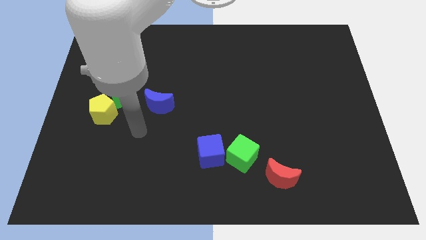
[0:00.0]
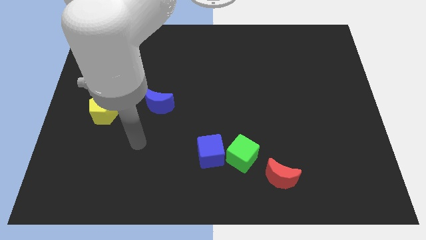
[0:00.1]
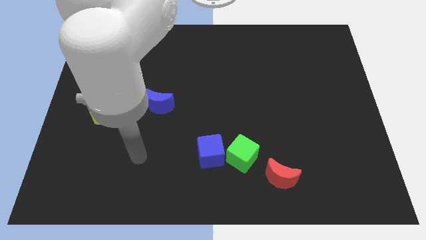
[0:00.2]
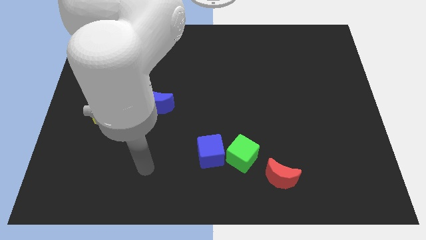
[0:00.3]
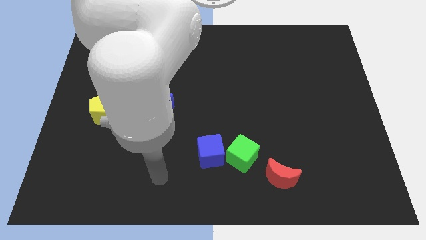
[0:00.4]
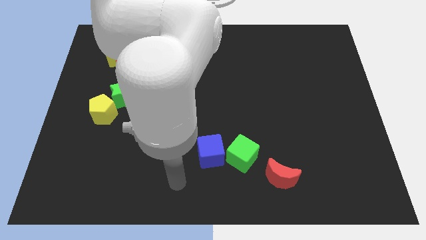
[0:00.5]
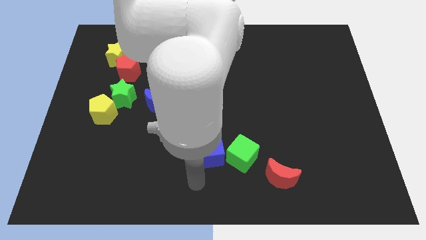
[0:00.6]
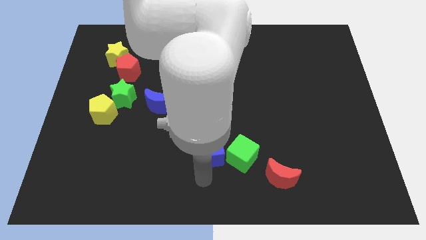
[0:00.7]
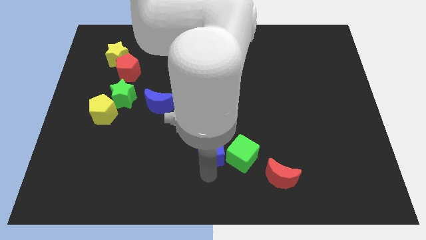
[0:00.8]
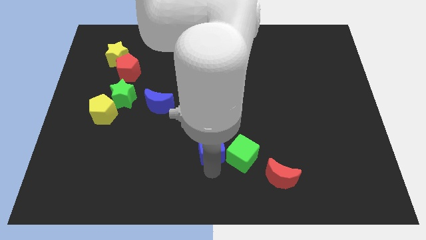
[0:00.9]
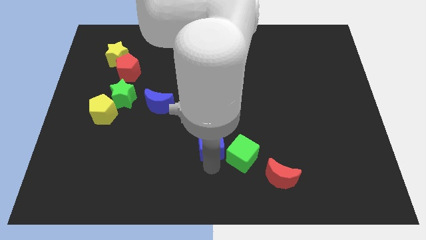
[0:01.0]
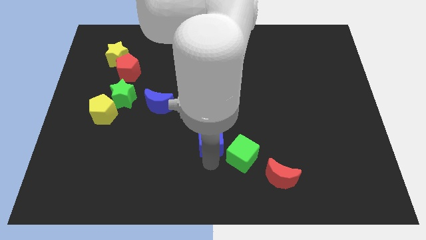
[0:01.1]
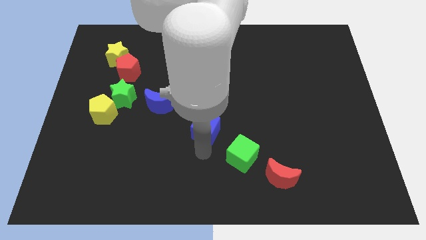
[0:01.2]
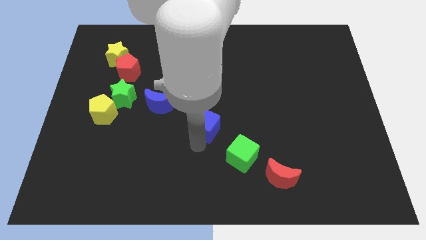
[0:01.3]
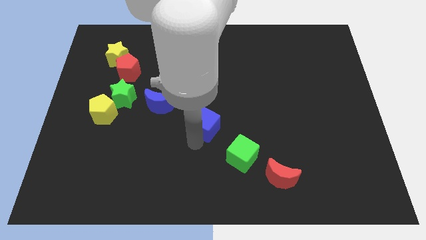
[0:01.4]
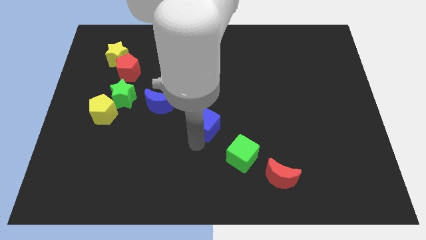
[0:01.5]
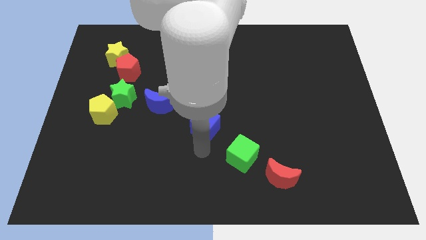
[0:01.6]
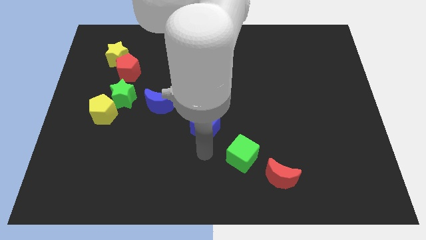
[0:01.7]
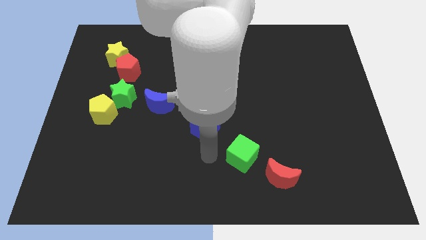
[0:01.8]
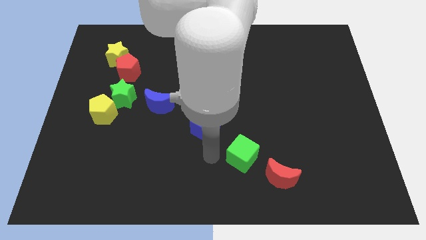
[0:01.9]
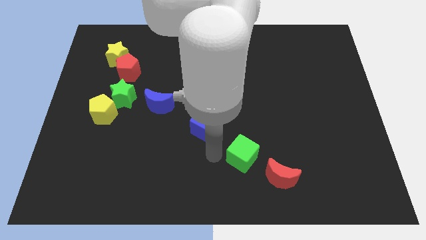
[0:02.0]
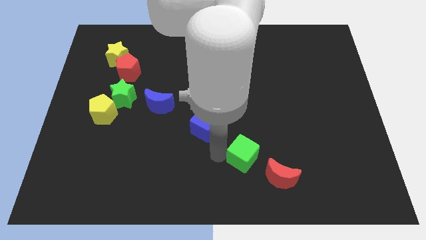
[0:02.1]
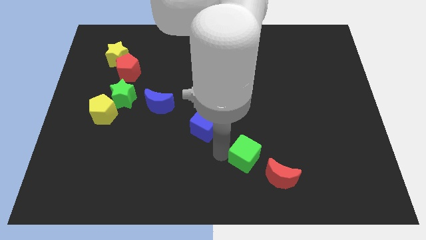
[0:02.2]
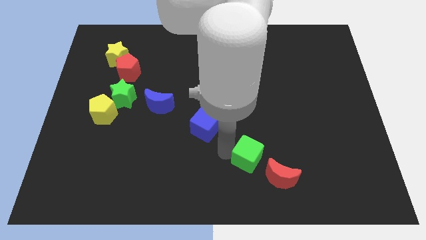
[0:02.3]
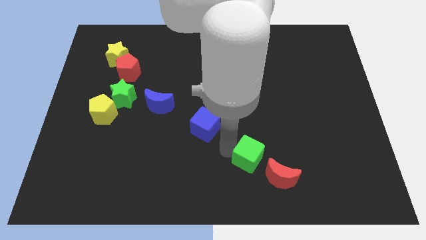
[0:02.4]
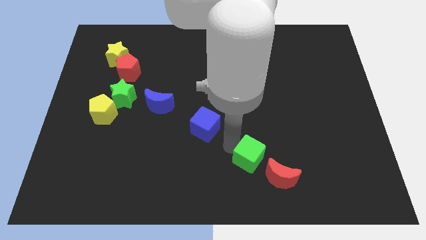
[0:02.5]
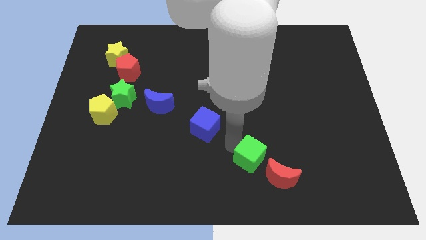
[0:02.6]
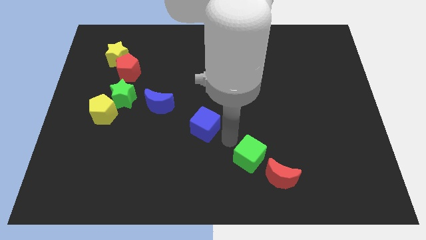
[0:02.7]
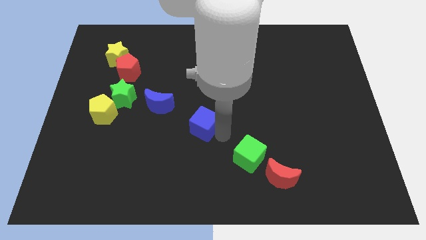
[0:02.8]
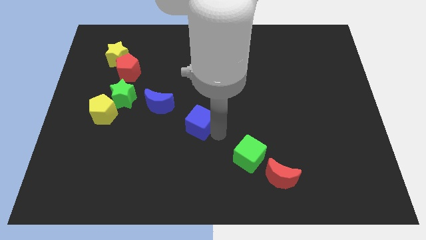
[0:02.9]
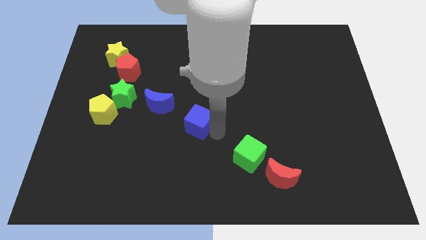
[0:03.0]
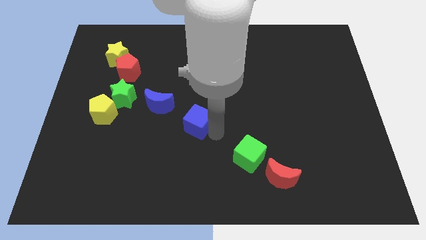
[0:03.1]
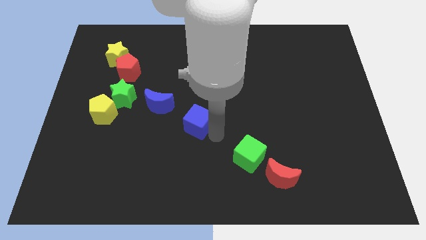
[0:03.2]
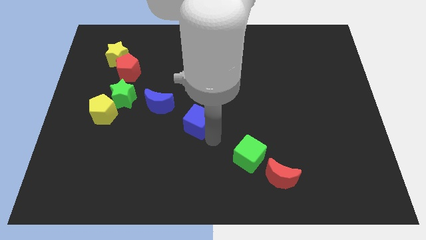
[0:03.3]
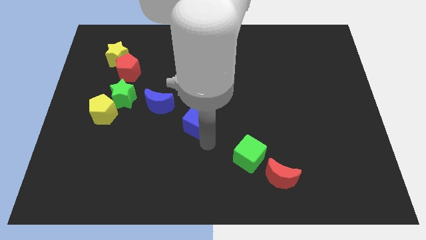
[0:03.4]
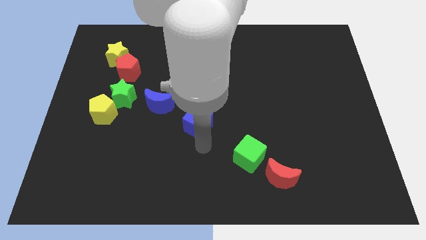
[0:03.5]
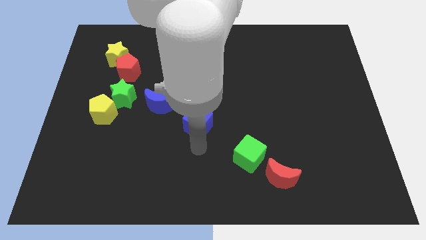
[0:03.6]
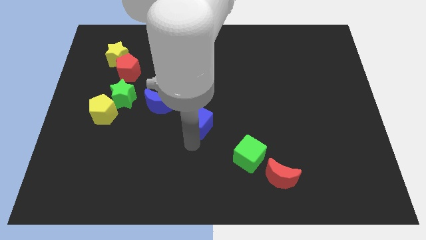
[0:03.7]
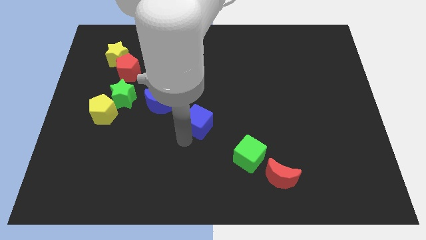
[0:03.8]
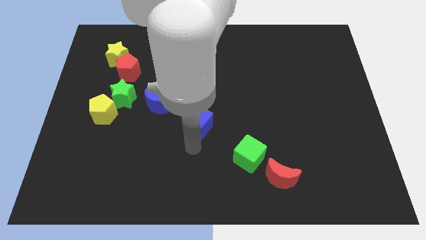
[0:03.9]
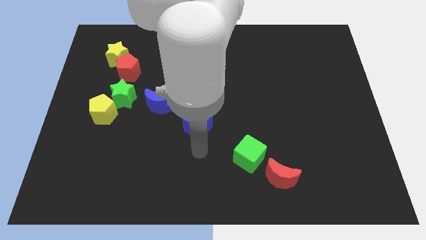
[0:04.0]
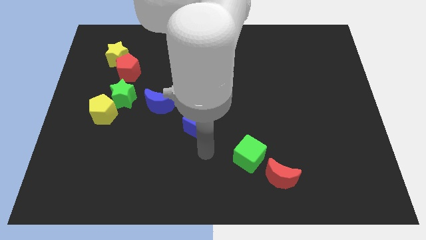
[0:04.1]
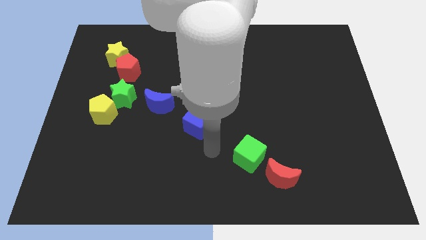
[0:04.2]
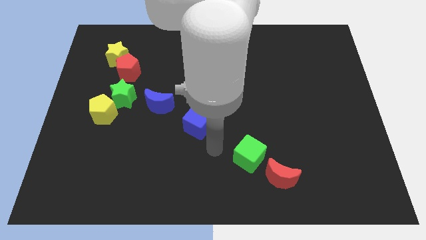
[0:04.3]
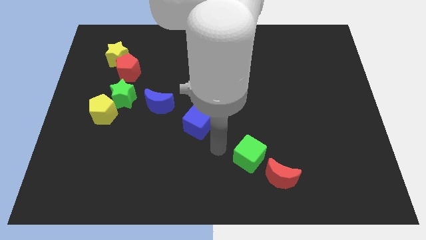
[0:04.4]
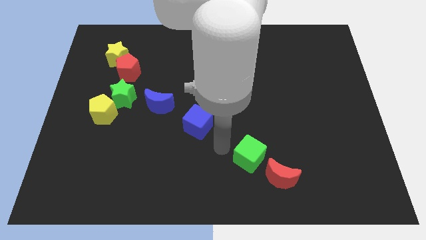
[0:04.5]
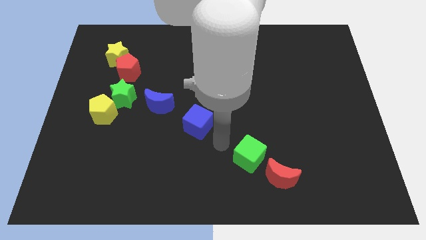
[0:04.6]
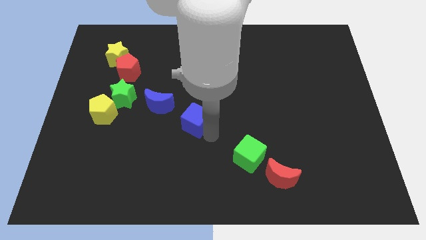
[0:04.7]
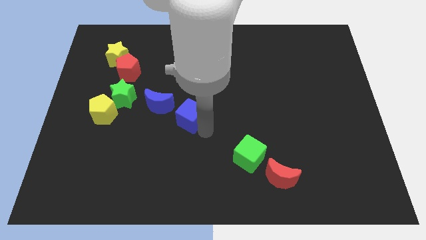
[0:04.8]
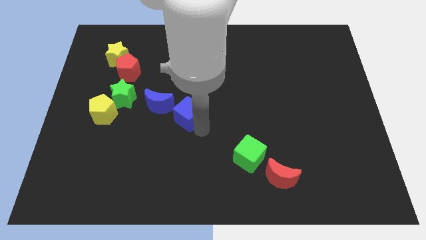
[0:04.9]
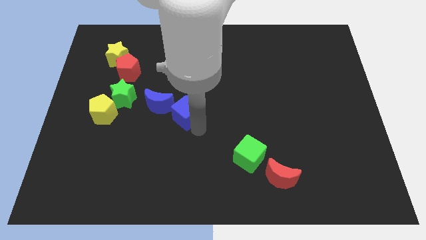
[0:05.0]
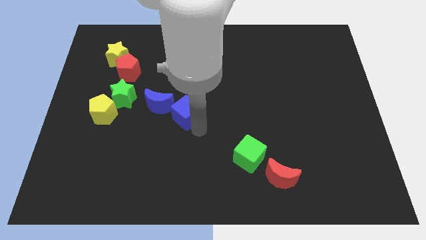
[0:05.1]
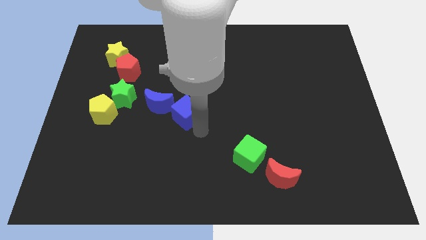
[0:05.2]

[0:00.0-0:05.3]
place the blue cube to the bottom right of the blue moon

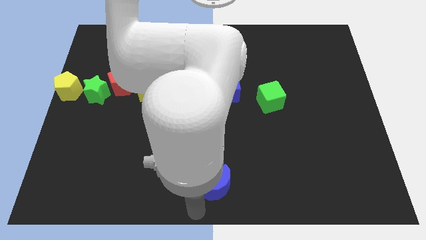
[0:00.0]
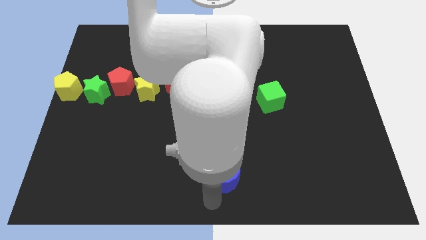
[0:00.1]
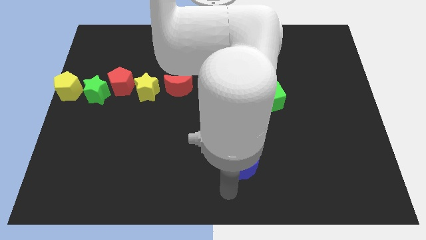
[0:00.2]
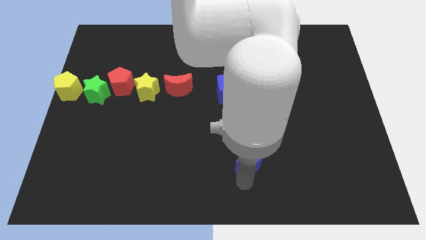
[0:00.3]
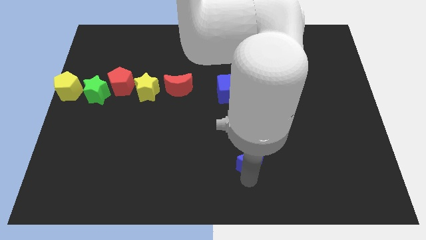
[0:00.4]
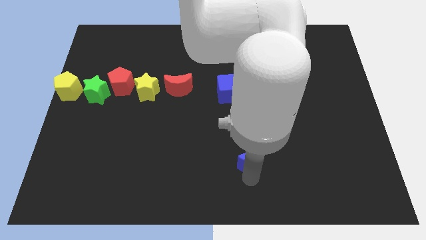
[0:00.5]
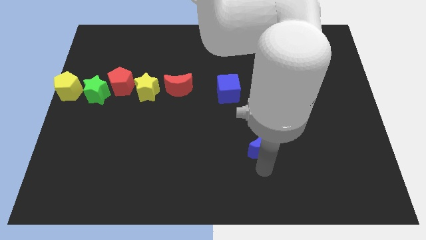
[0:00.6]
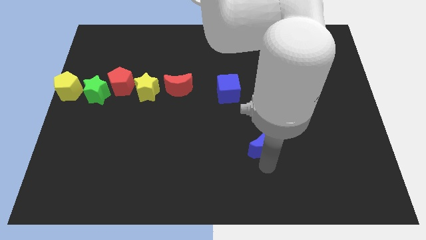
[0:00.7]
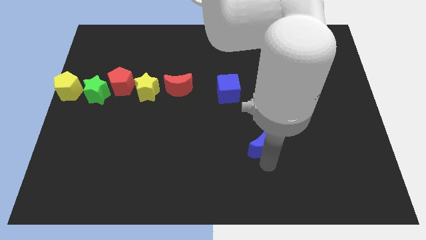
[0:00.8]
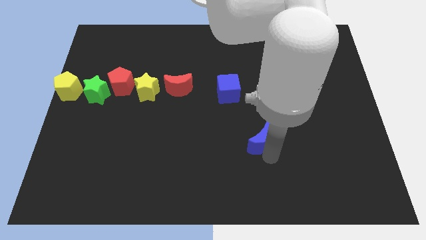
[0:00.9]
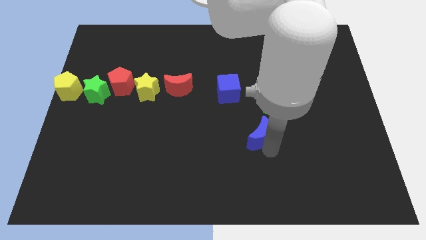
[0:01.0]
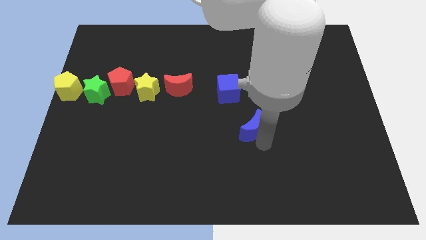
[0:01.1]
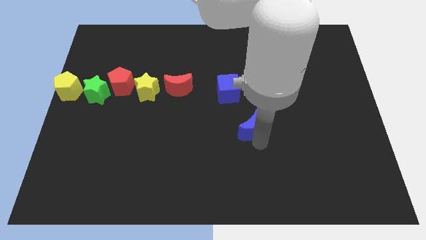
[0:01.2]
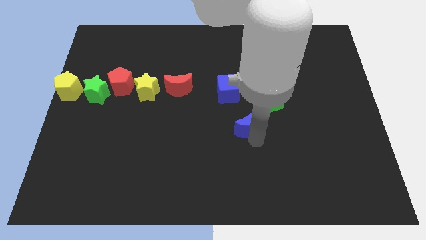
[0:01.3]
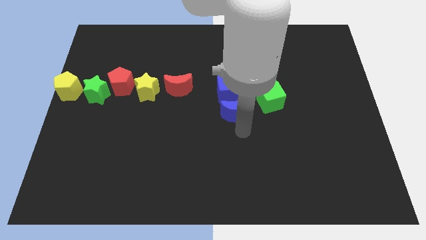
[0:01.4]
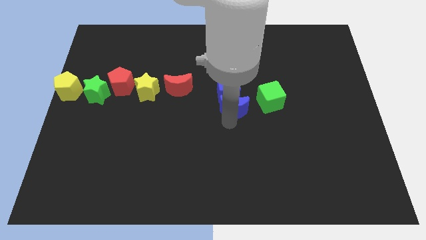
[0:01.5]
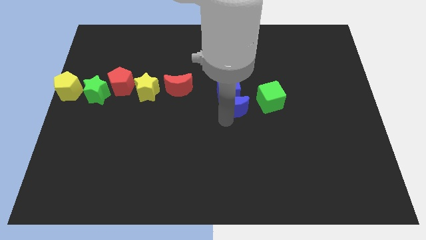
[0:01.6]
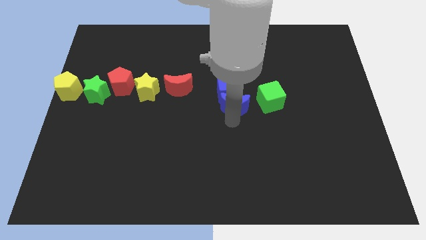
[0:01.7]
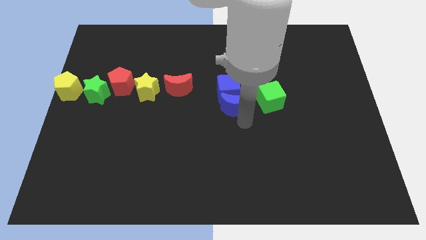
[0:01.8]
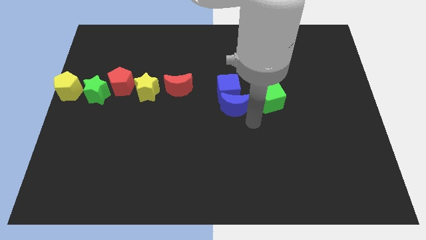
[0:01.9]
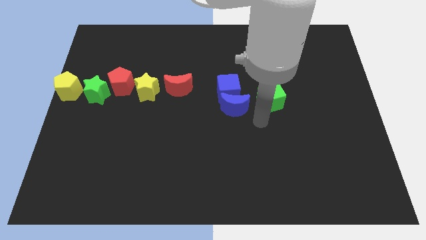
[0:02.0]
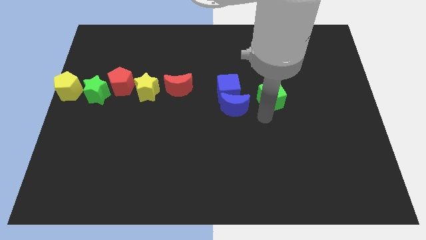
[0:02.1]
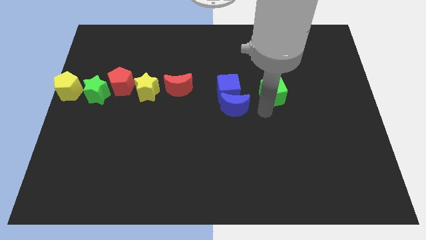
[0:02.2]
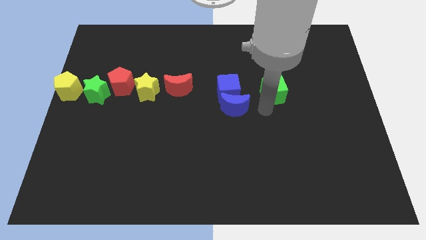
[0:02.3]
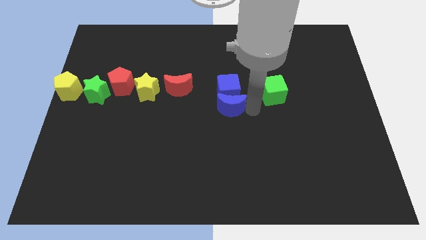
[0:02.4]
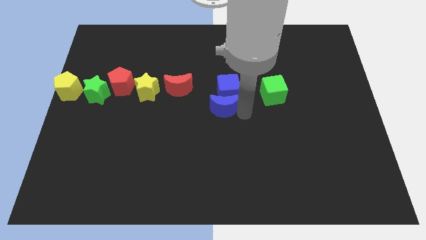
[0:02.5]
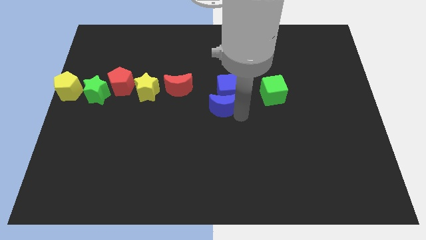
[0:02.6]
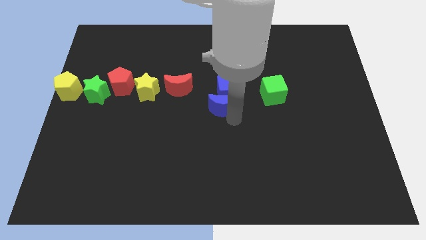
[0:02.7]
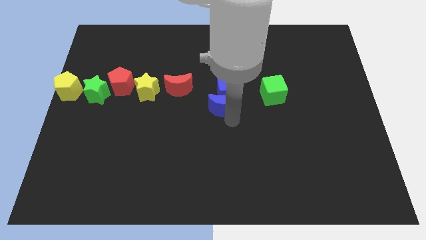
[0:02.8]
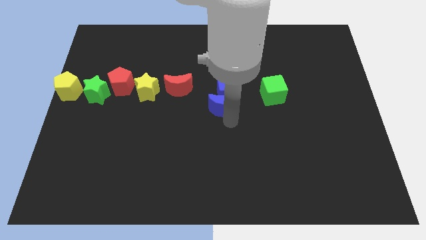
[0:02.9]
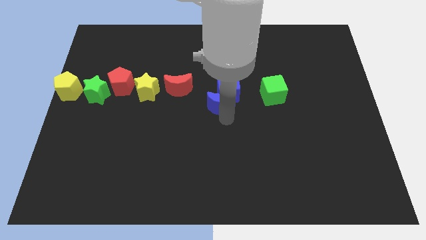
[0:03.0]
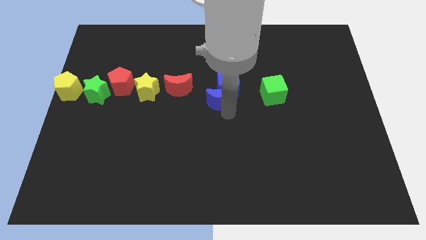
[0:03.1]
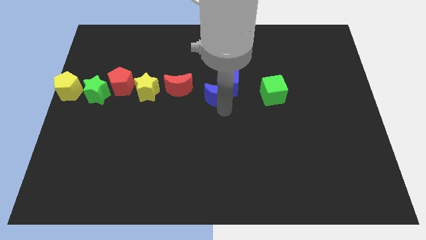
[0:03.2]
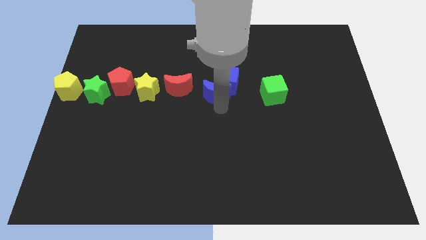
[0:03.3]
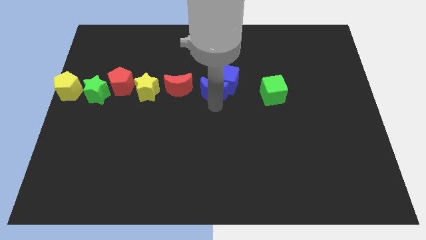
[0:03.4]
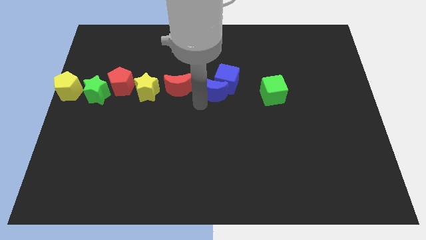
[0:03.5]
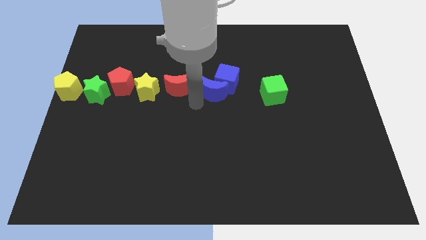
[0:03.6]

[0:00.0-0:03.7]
push the blue moon into the blue cube
